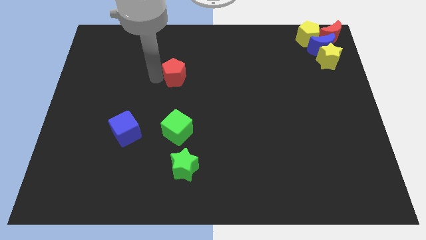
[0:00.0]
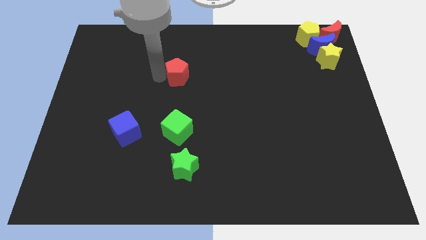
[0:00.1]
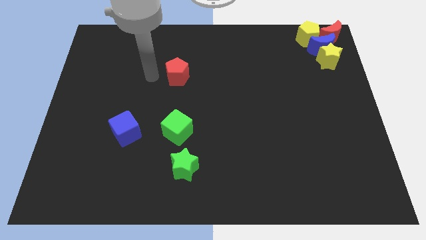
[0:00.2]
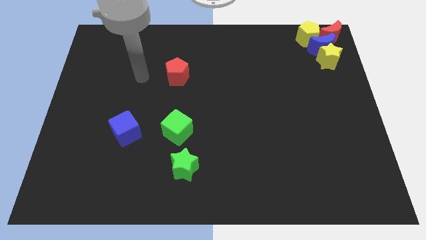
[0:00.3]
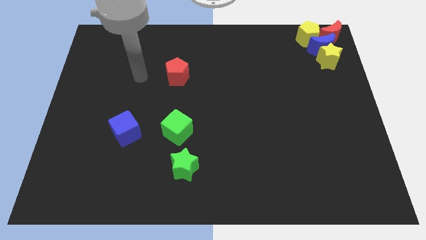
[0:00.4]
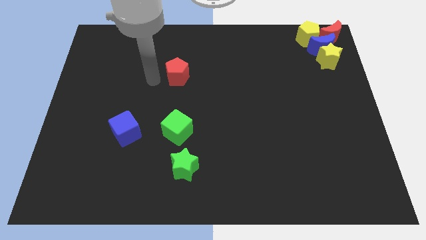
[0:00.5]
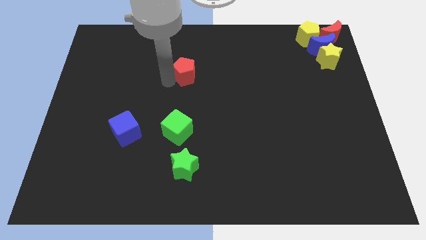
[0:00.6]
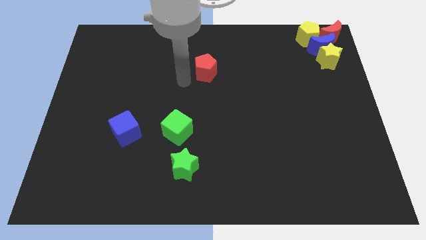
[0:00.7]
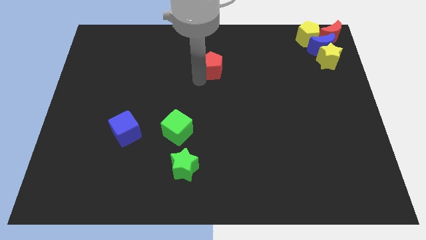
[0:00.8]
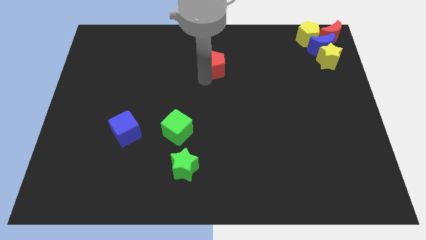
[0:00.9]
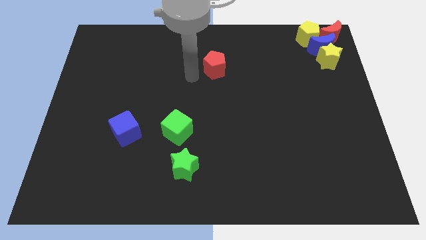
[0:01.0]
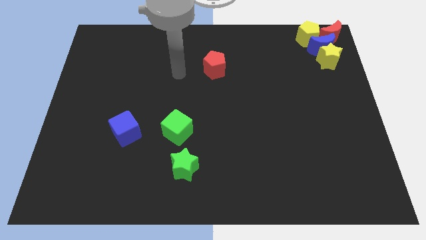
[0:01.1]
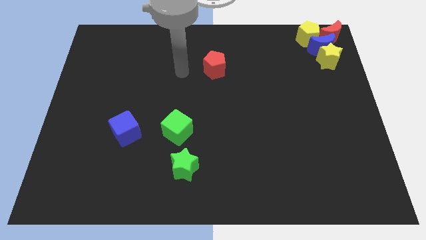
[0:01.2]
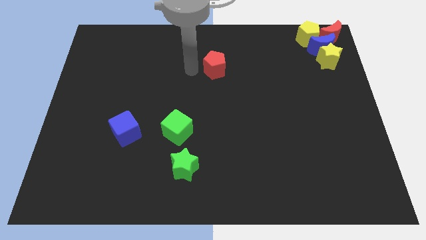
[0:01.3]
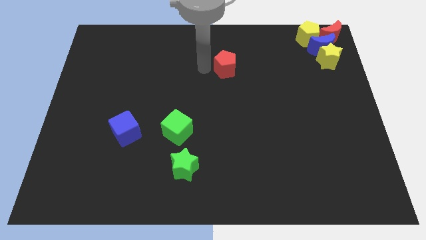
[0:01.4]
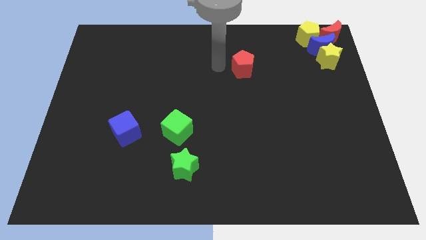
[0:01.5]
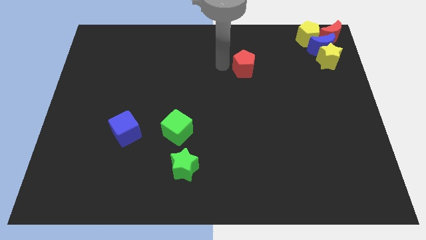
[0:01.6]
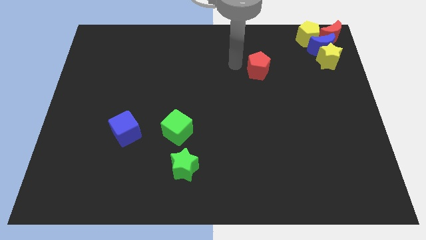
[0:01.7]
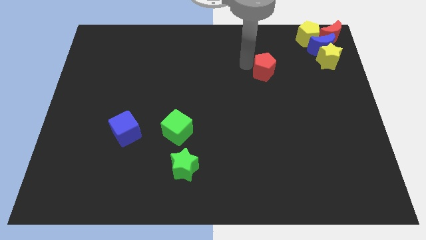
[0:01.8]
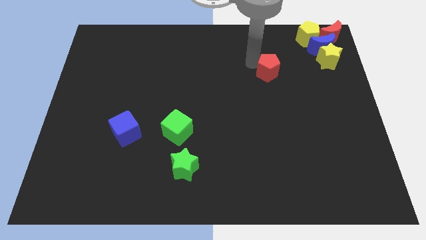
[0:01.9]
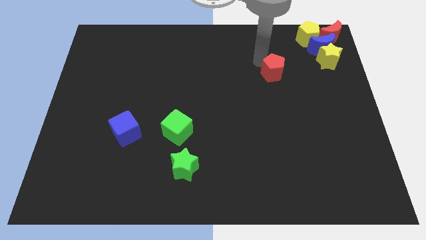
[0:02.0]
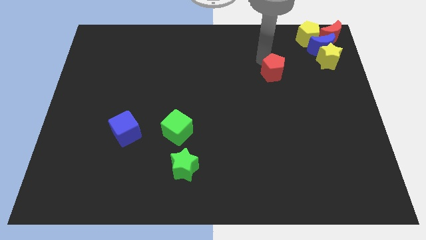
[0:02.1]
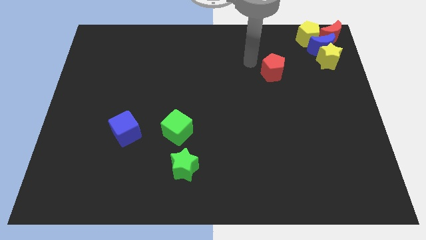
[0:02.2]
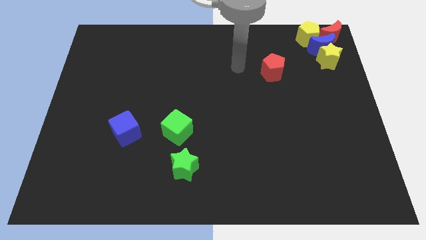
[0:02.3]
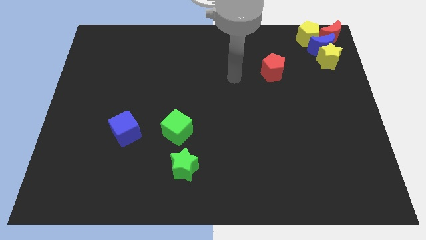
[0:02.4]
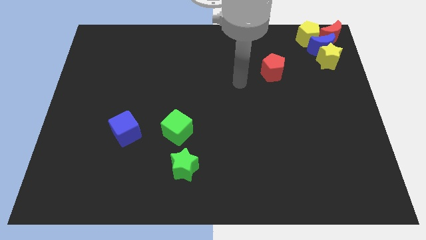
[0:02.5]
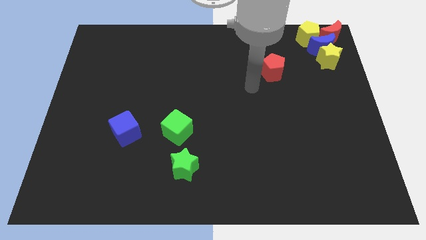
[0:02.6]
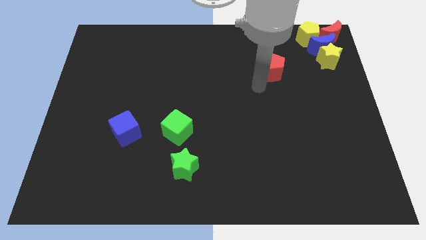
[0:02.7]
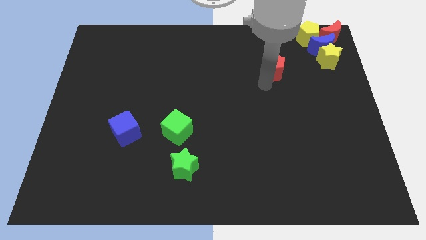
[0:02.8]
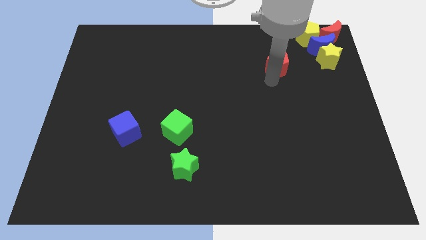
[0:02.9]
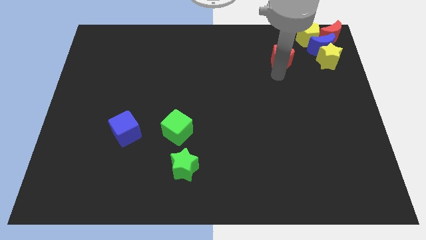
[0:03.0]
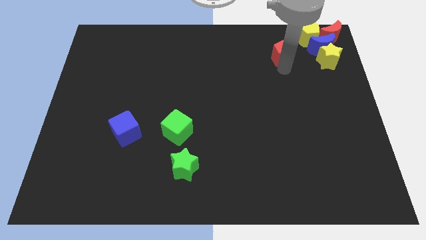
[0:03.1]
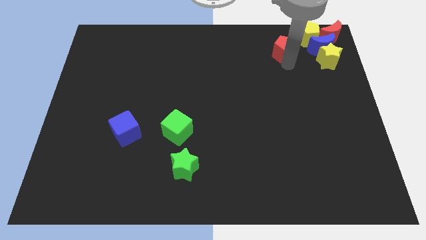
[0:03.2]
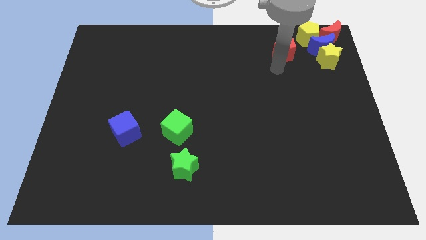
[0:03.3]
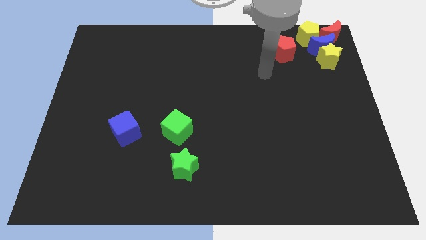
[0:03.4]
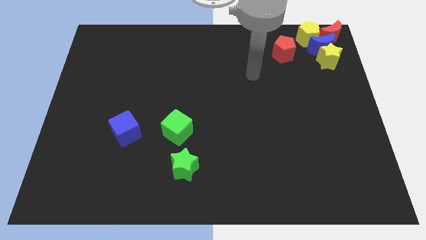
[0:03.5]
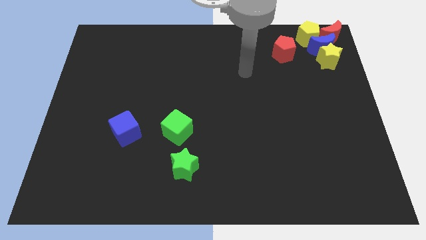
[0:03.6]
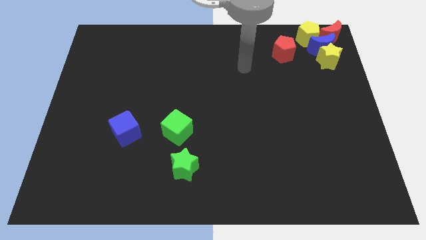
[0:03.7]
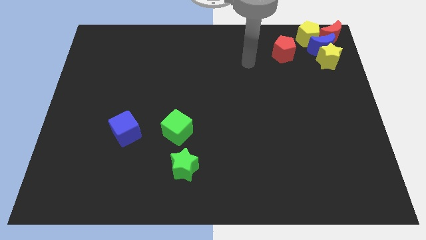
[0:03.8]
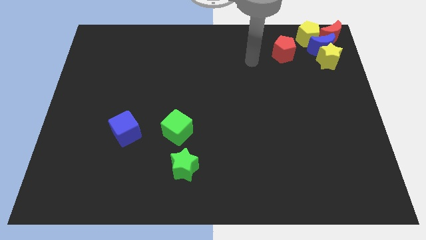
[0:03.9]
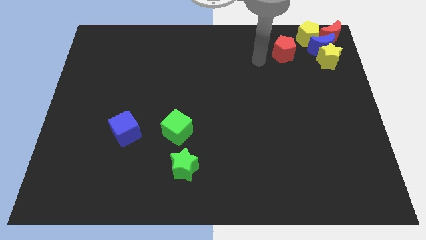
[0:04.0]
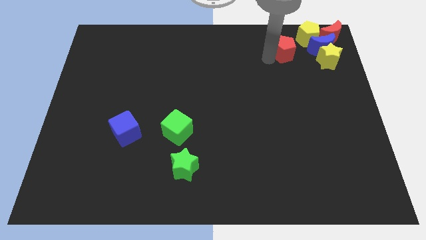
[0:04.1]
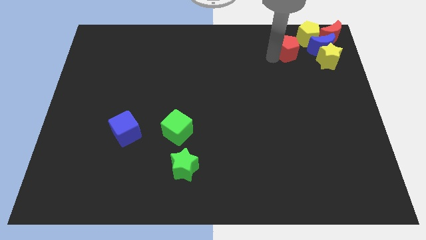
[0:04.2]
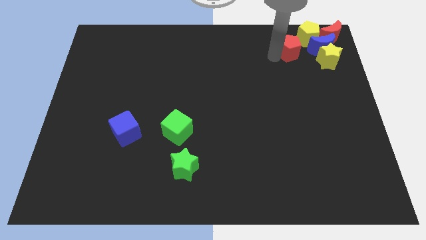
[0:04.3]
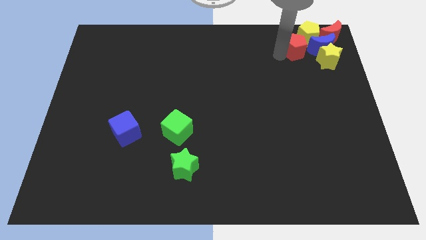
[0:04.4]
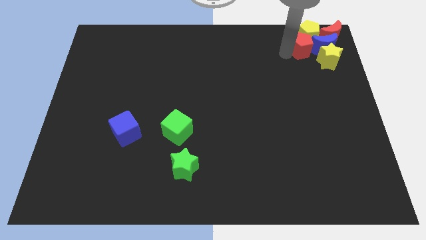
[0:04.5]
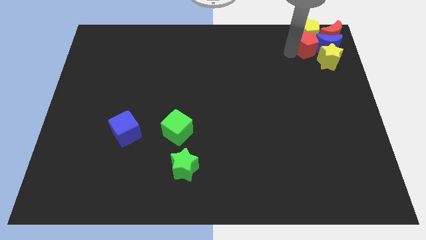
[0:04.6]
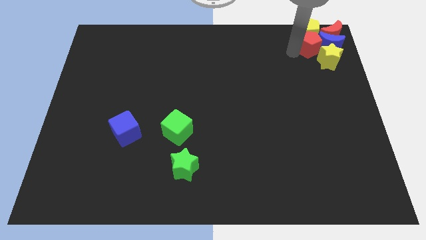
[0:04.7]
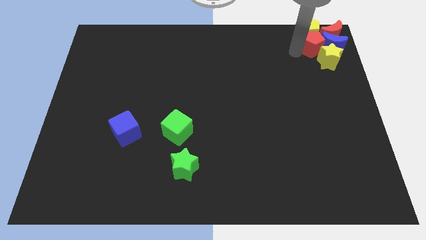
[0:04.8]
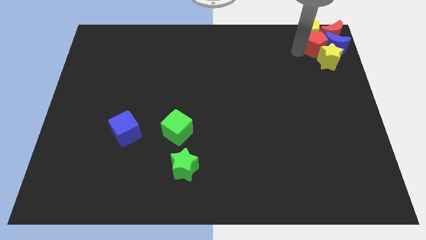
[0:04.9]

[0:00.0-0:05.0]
push the red pentagon to the left of the blue crescent

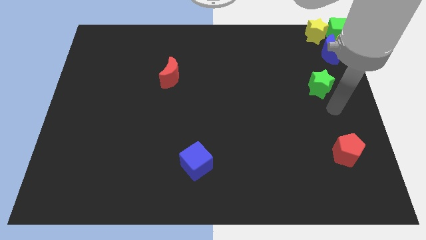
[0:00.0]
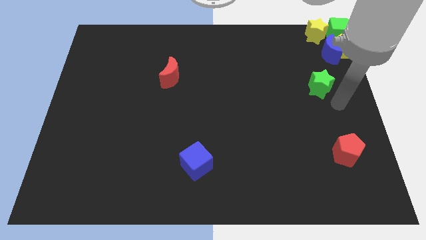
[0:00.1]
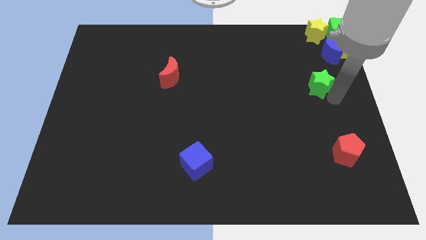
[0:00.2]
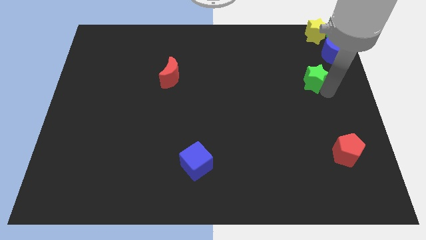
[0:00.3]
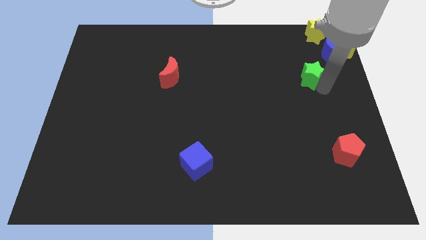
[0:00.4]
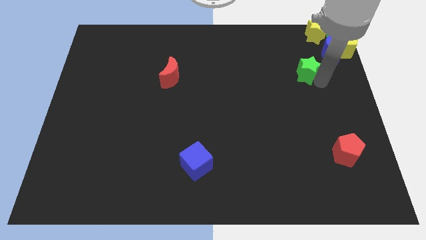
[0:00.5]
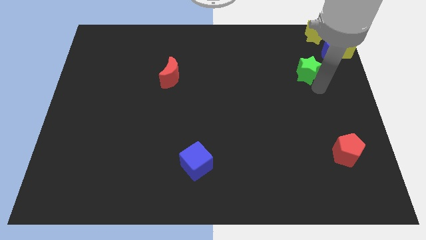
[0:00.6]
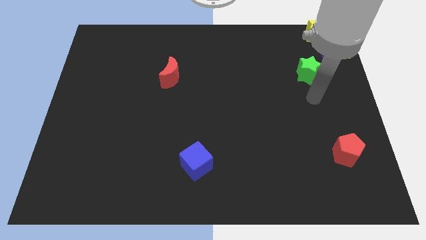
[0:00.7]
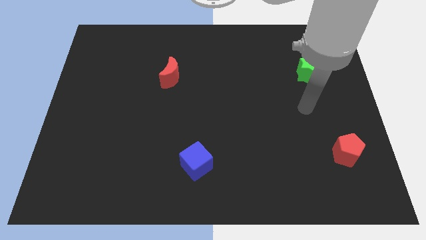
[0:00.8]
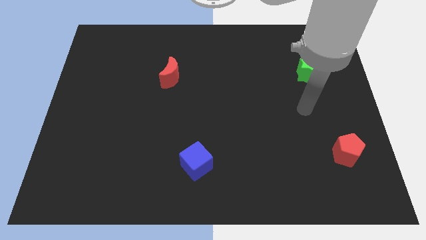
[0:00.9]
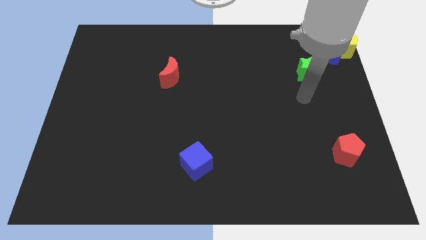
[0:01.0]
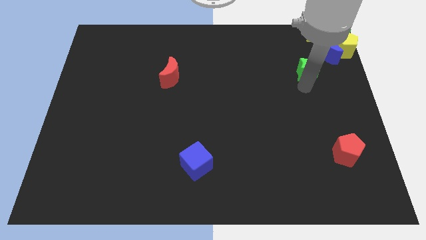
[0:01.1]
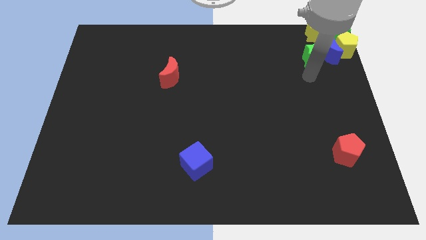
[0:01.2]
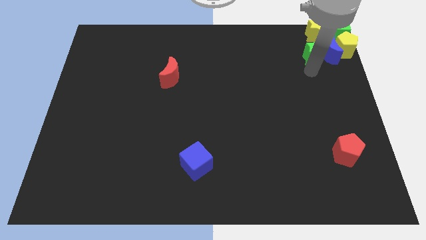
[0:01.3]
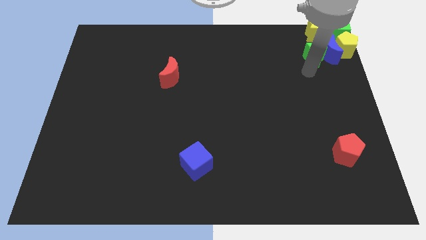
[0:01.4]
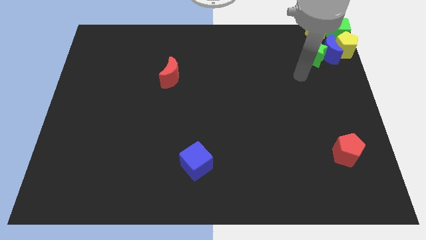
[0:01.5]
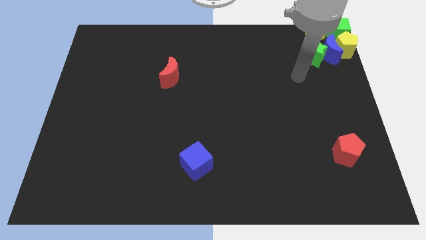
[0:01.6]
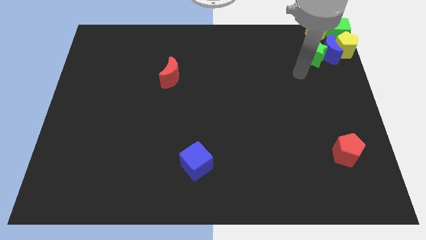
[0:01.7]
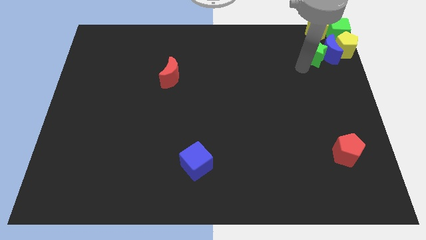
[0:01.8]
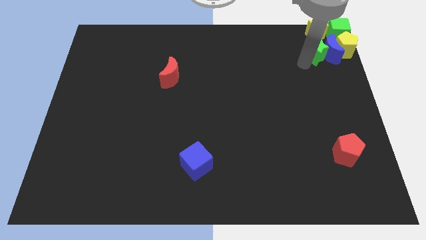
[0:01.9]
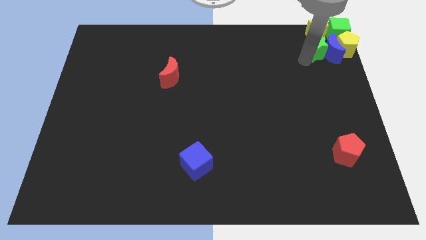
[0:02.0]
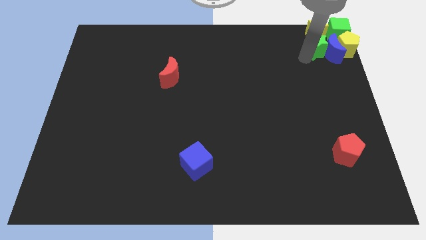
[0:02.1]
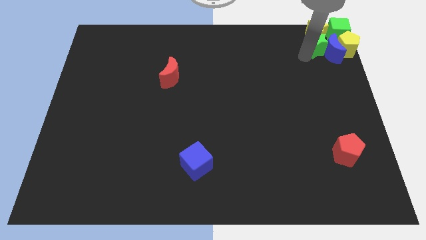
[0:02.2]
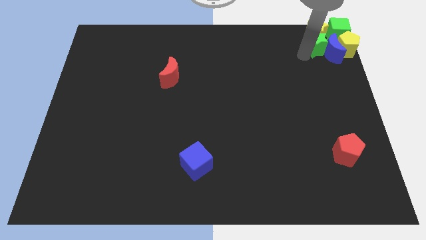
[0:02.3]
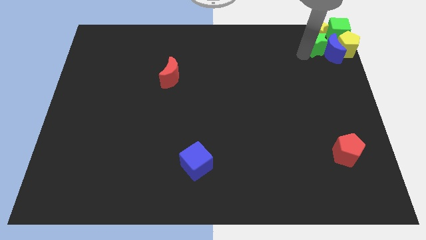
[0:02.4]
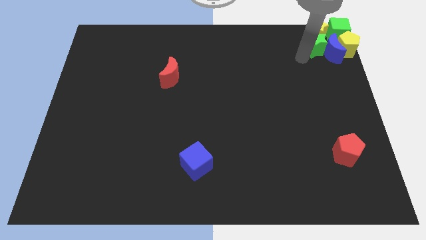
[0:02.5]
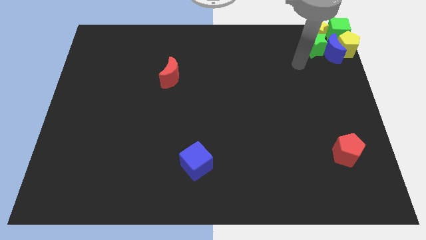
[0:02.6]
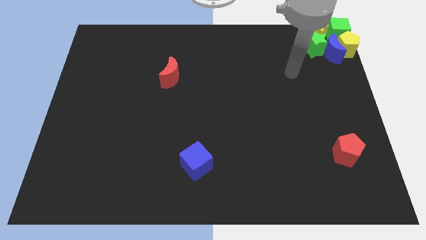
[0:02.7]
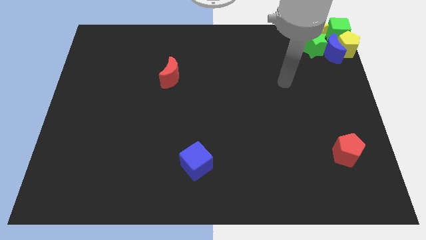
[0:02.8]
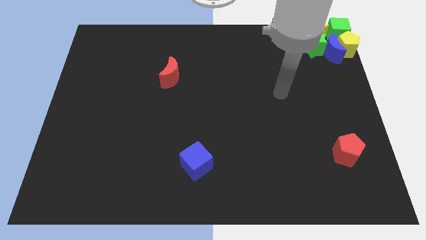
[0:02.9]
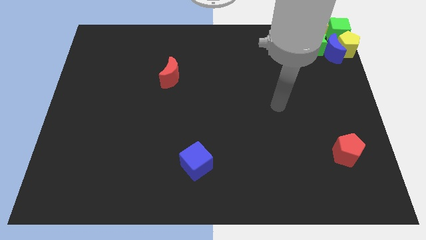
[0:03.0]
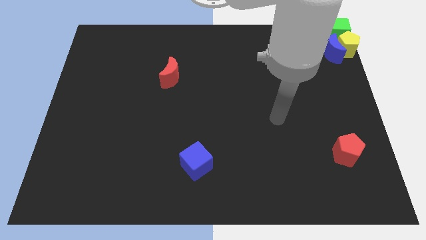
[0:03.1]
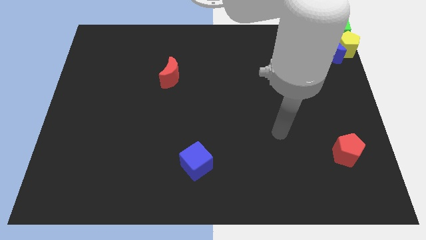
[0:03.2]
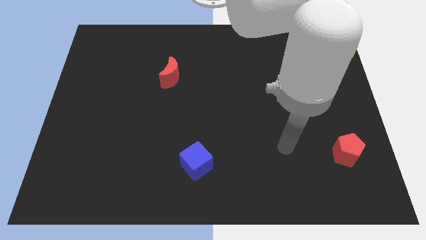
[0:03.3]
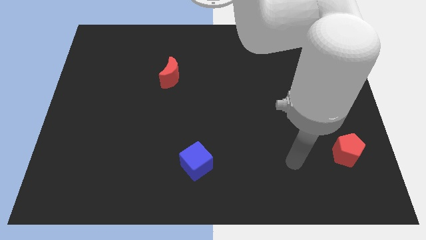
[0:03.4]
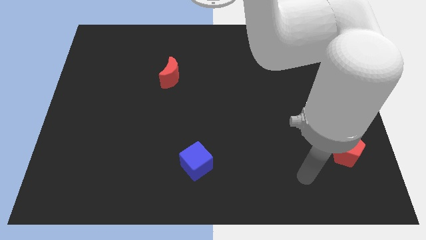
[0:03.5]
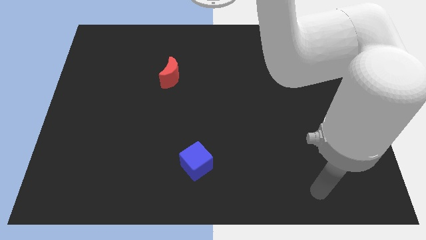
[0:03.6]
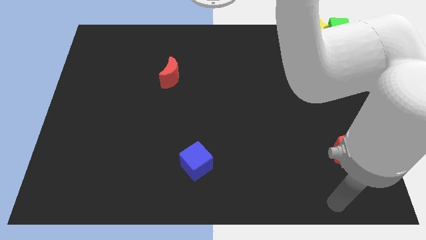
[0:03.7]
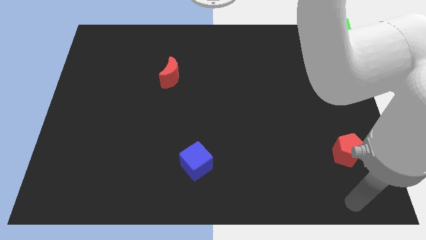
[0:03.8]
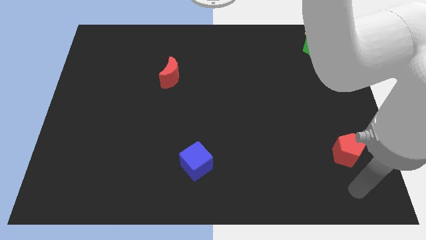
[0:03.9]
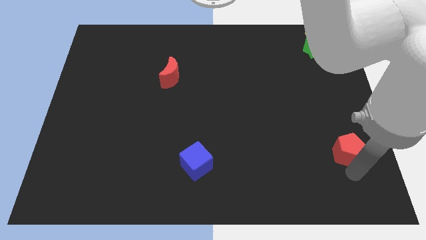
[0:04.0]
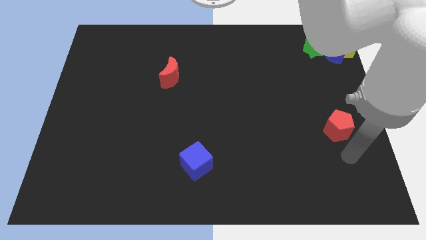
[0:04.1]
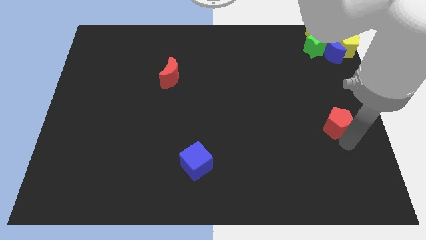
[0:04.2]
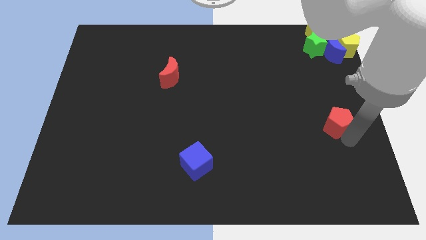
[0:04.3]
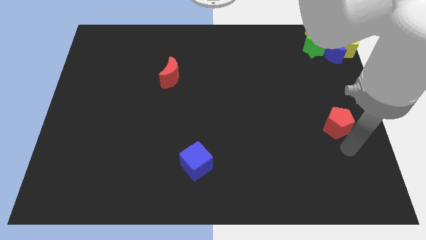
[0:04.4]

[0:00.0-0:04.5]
push the red pentagon upwards to the center right
